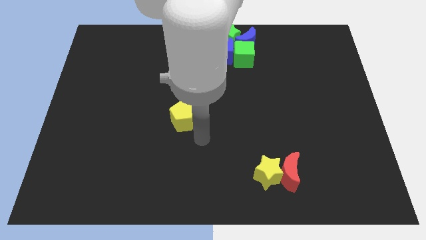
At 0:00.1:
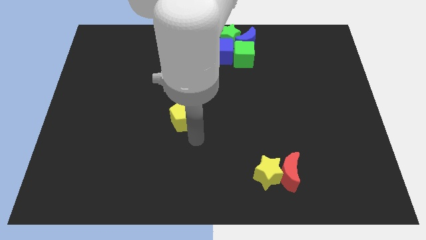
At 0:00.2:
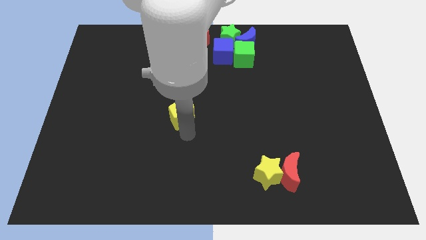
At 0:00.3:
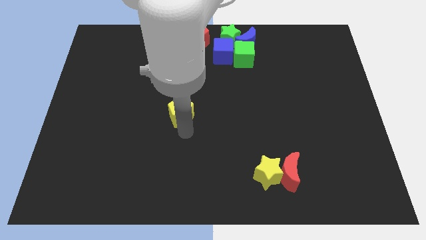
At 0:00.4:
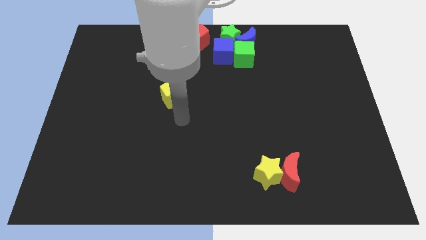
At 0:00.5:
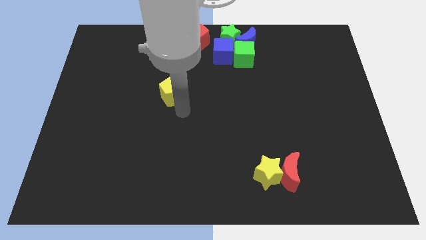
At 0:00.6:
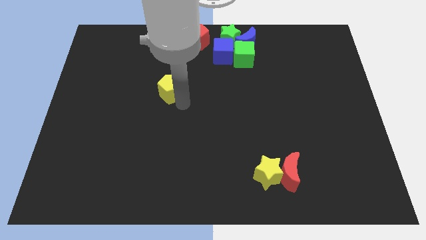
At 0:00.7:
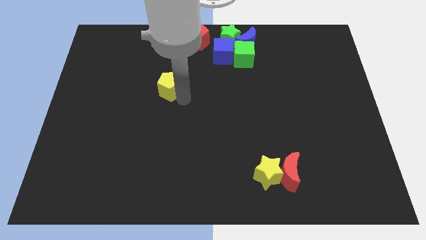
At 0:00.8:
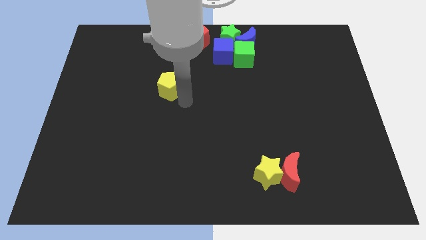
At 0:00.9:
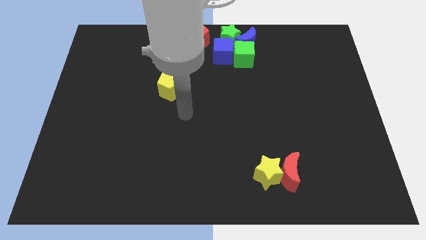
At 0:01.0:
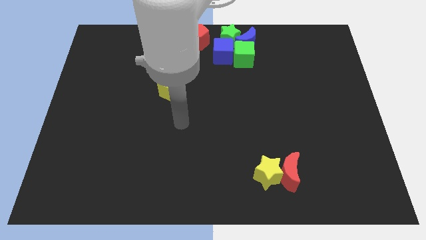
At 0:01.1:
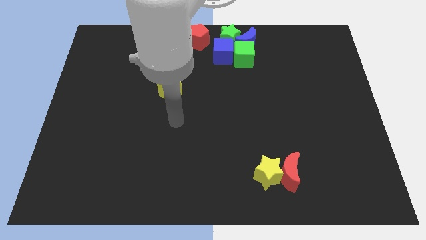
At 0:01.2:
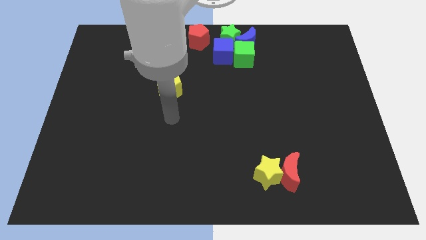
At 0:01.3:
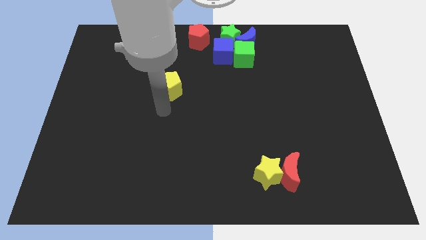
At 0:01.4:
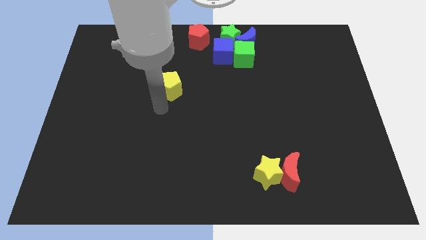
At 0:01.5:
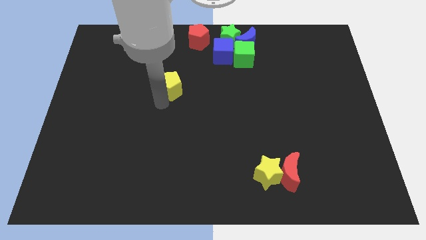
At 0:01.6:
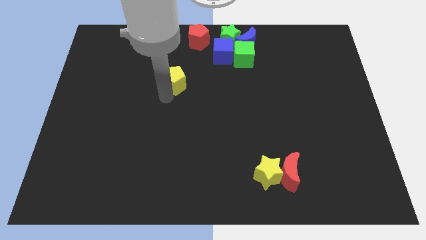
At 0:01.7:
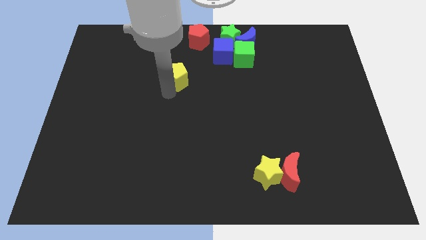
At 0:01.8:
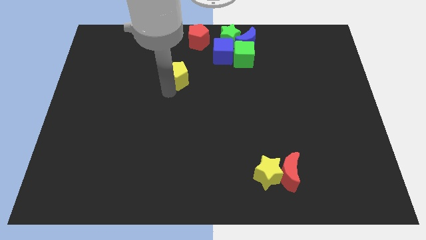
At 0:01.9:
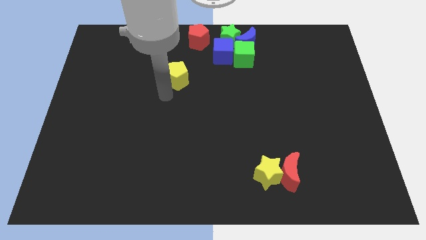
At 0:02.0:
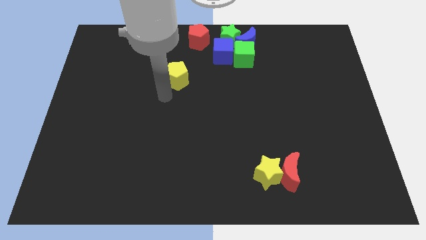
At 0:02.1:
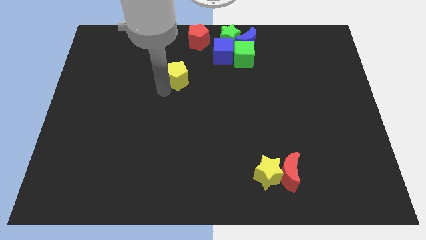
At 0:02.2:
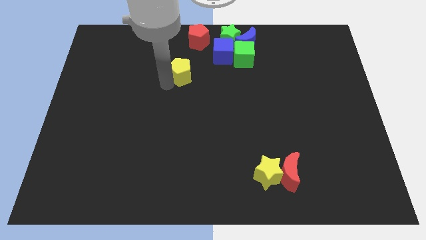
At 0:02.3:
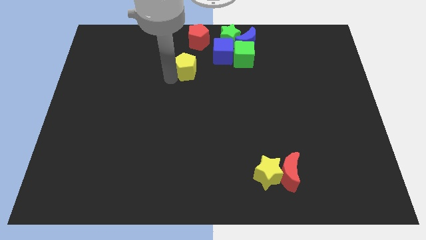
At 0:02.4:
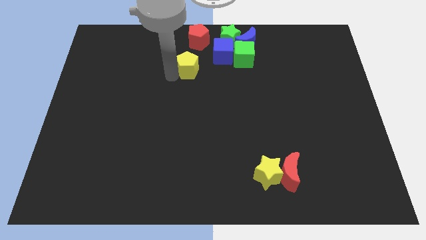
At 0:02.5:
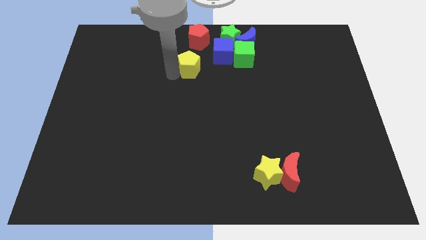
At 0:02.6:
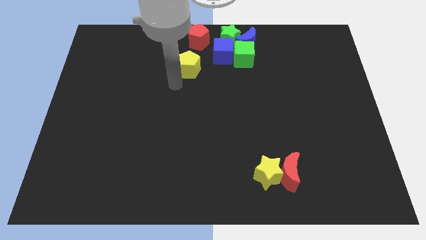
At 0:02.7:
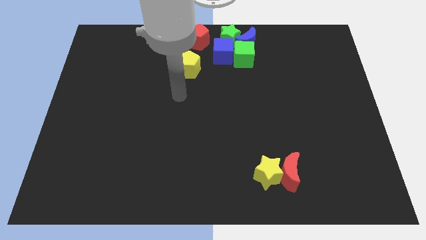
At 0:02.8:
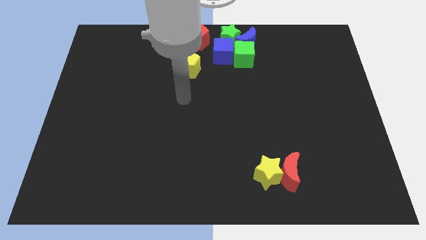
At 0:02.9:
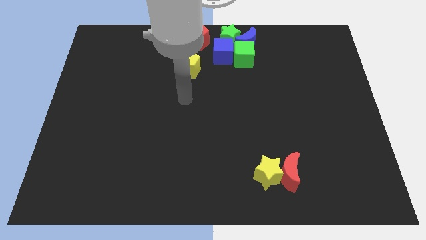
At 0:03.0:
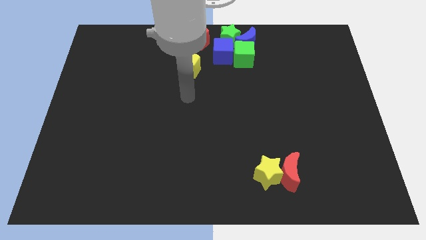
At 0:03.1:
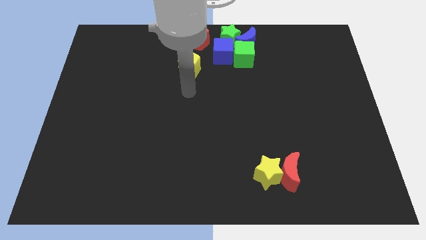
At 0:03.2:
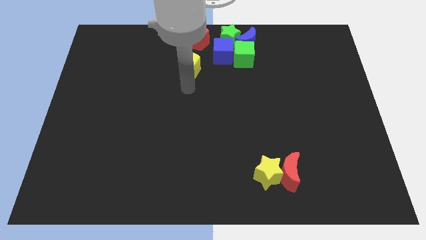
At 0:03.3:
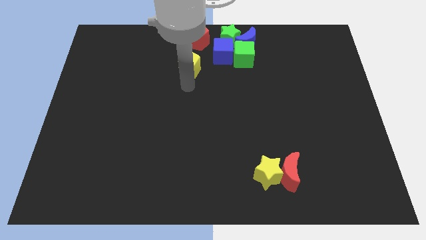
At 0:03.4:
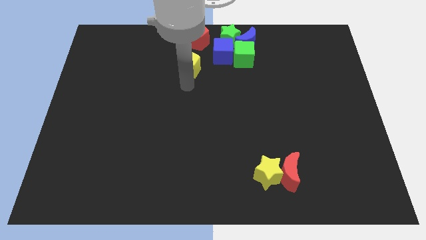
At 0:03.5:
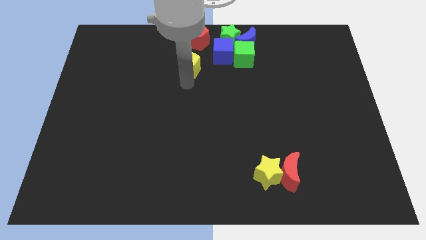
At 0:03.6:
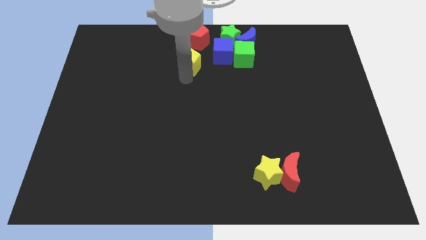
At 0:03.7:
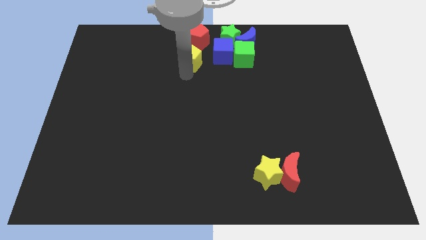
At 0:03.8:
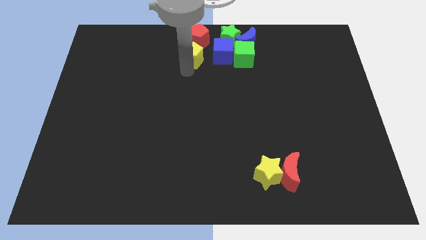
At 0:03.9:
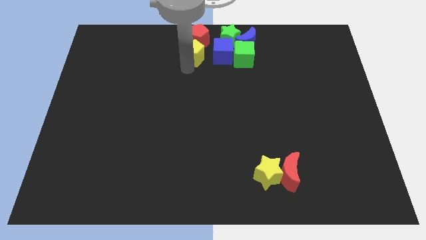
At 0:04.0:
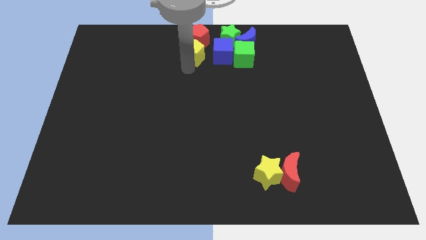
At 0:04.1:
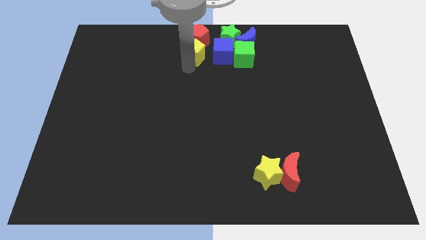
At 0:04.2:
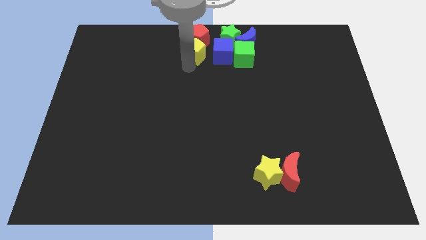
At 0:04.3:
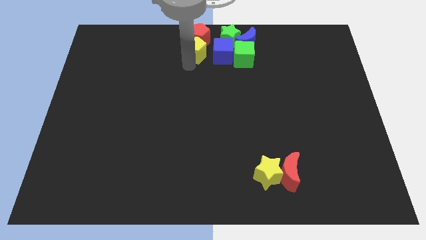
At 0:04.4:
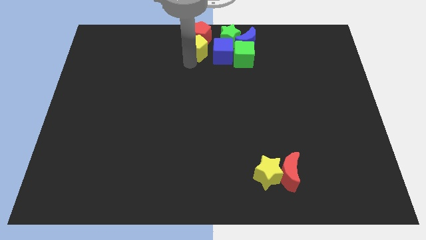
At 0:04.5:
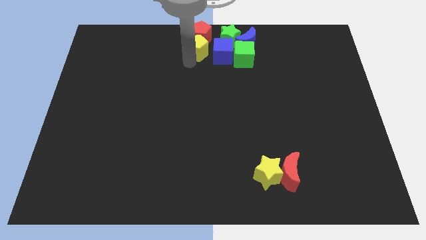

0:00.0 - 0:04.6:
move the yellow pentagon into the red pentagon

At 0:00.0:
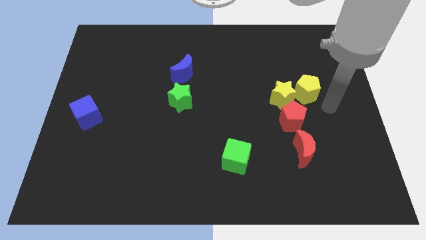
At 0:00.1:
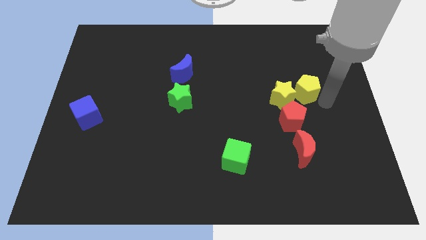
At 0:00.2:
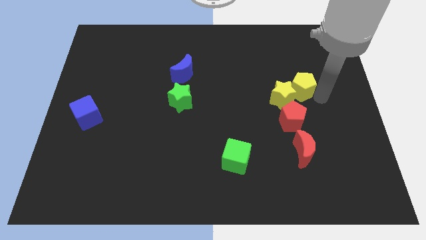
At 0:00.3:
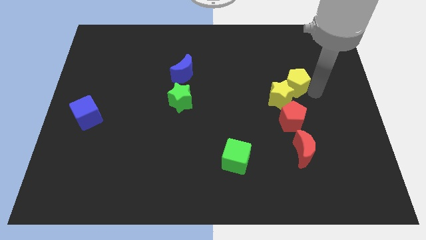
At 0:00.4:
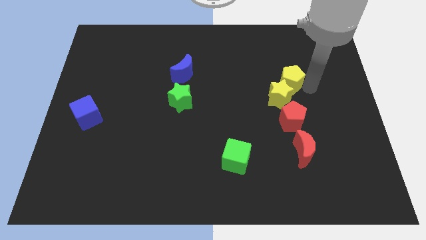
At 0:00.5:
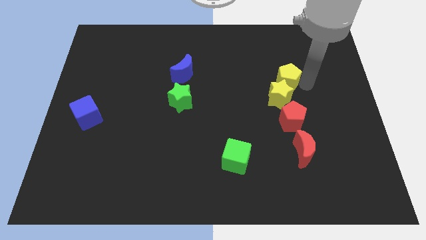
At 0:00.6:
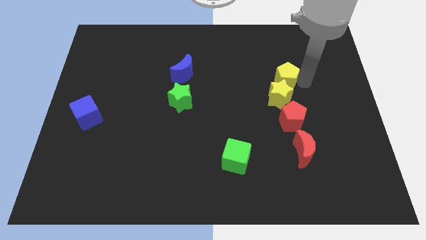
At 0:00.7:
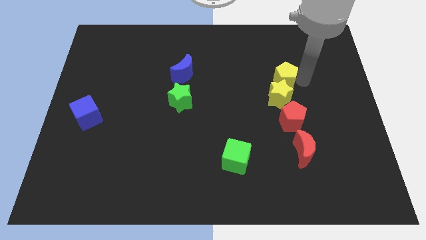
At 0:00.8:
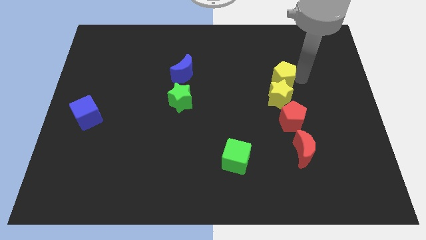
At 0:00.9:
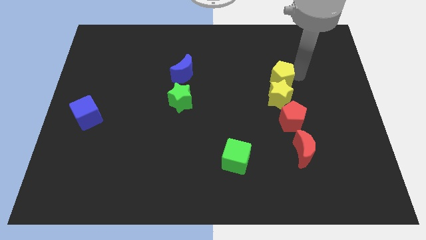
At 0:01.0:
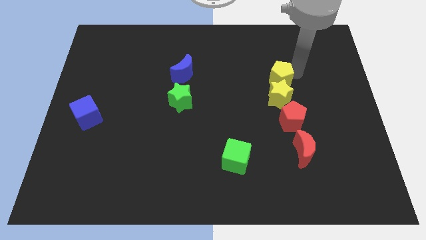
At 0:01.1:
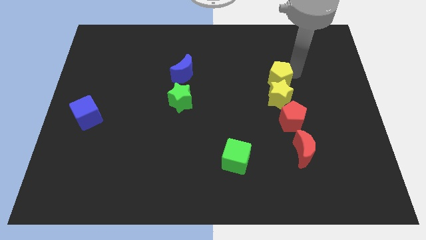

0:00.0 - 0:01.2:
place the yellow pentagon to the top of the yellow star

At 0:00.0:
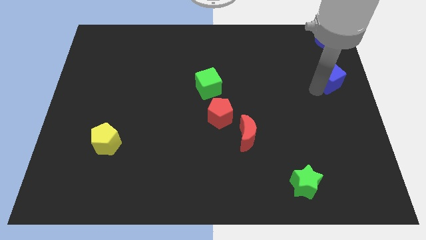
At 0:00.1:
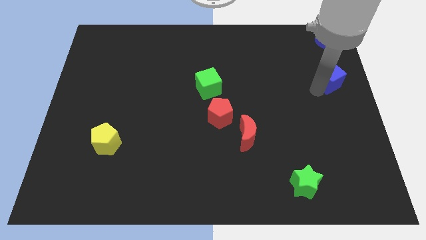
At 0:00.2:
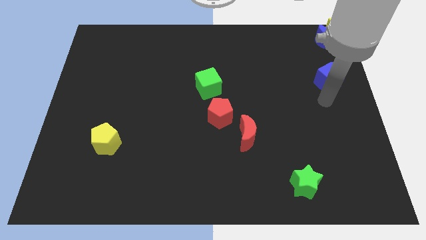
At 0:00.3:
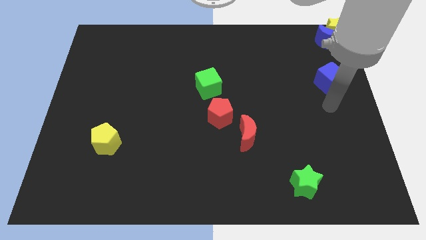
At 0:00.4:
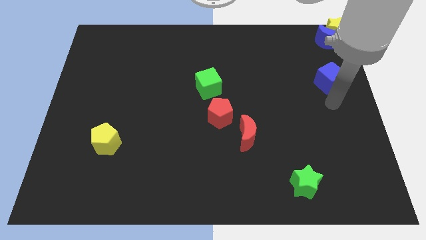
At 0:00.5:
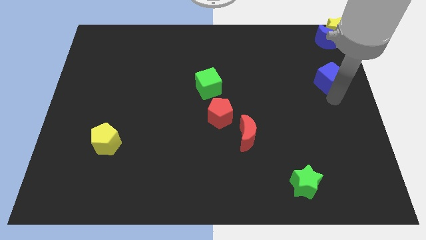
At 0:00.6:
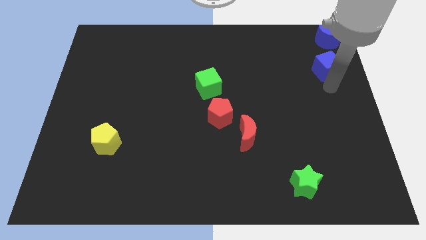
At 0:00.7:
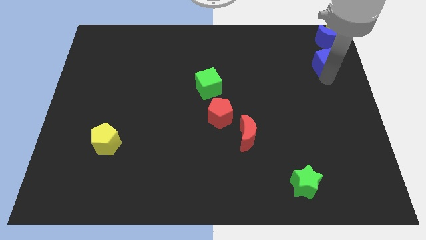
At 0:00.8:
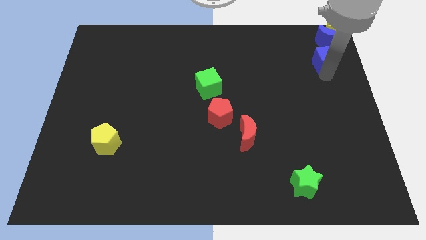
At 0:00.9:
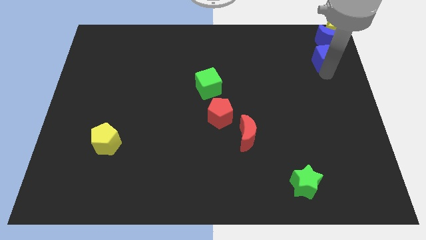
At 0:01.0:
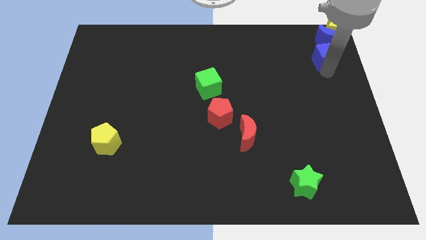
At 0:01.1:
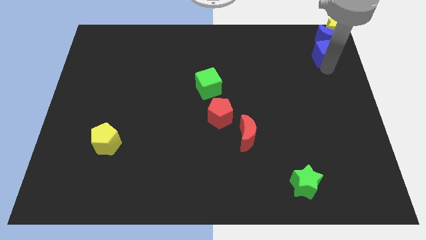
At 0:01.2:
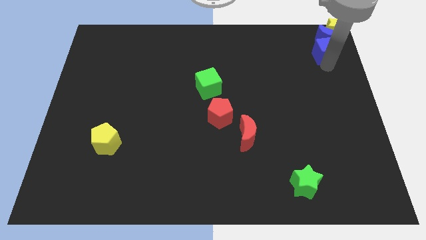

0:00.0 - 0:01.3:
move the blue cube towards the bottom of the blue crescent

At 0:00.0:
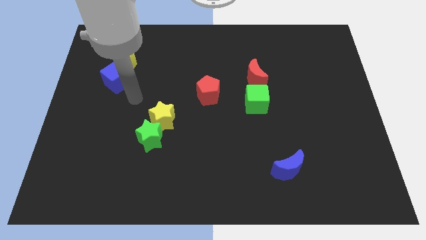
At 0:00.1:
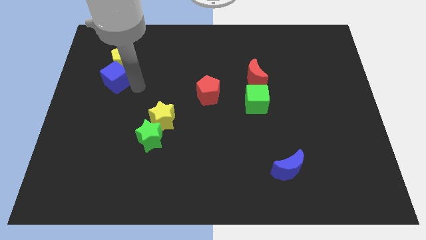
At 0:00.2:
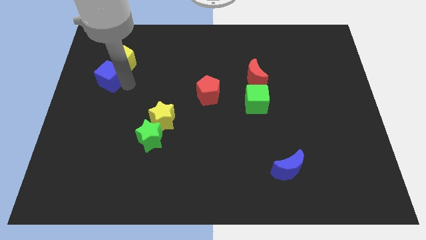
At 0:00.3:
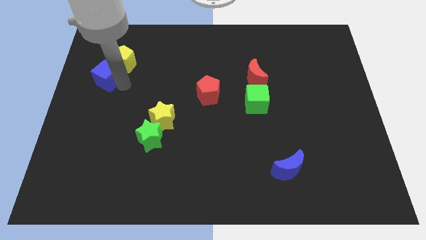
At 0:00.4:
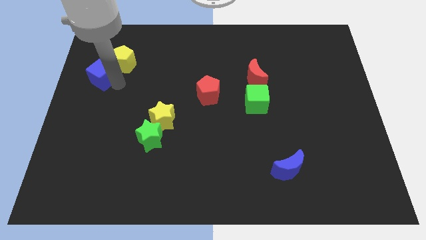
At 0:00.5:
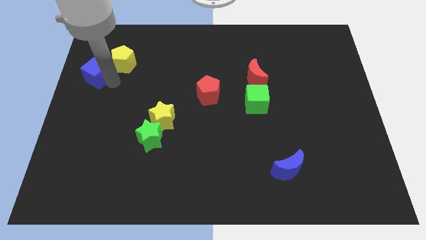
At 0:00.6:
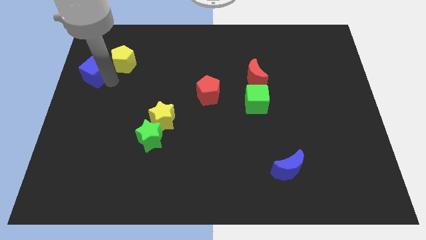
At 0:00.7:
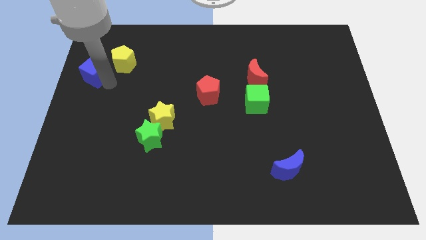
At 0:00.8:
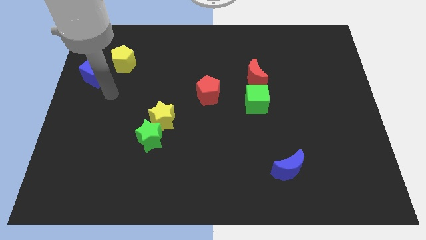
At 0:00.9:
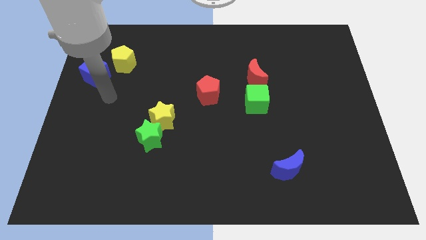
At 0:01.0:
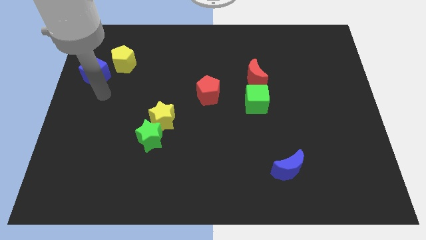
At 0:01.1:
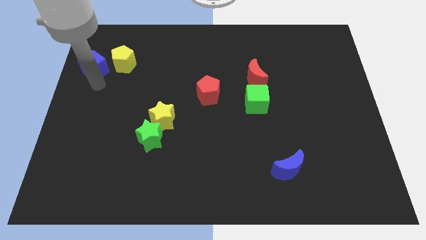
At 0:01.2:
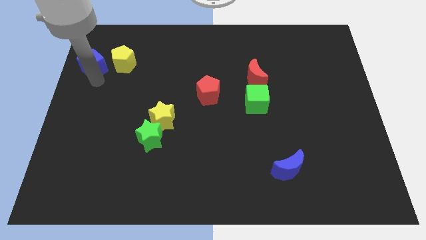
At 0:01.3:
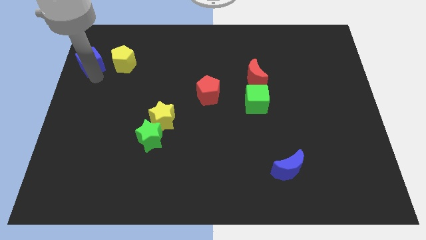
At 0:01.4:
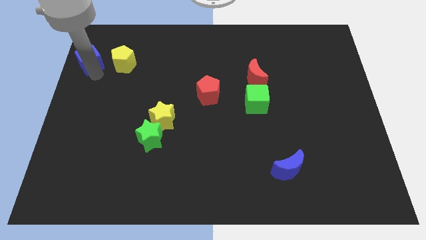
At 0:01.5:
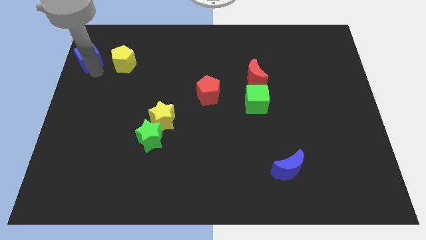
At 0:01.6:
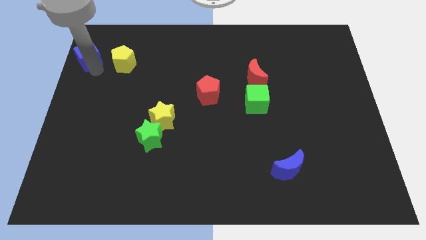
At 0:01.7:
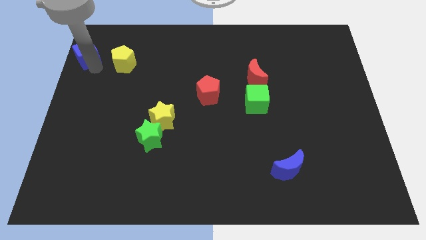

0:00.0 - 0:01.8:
move the blue cube to the left of the yellow pentagon
